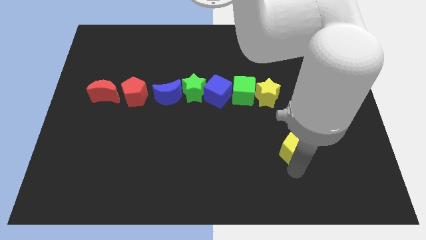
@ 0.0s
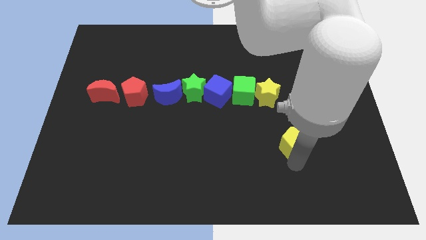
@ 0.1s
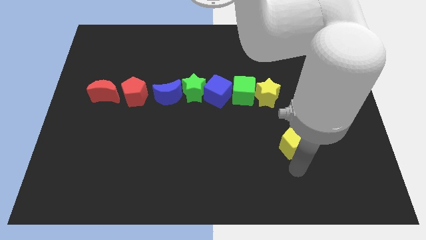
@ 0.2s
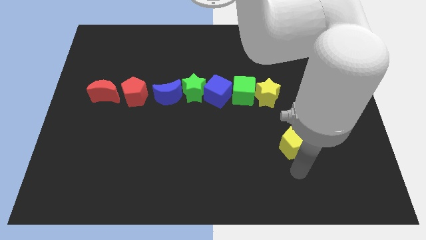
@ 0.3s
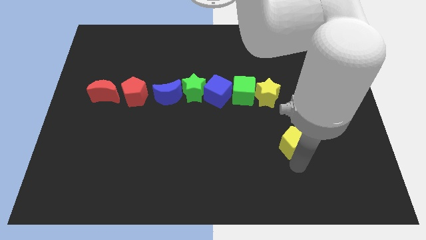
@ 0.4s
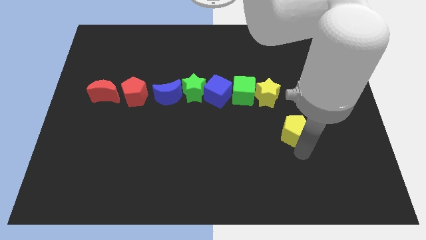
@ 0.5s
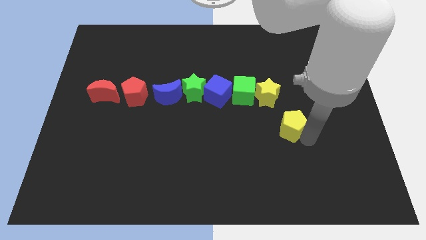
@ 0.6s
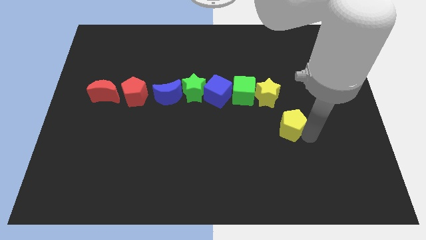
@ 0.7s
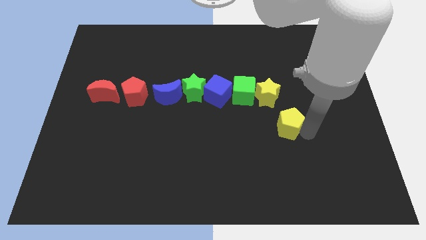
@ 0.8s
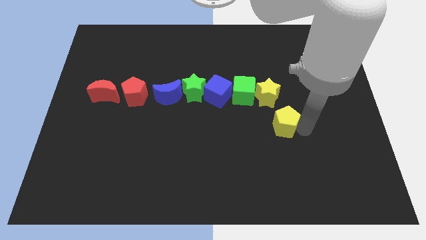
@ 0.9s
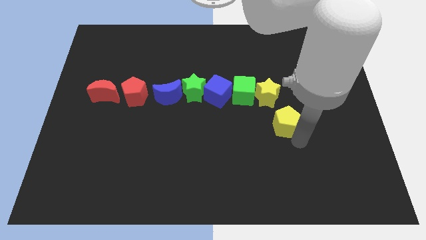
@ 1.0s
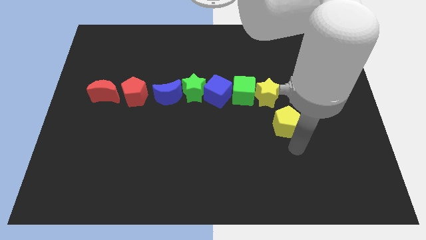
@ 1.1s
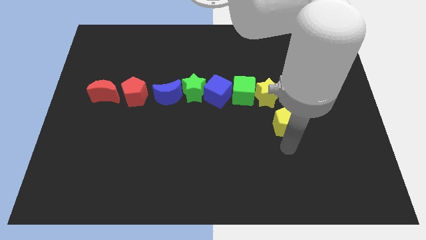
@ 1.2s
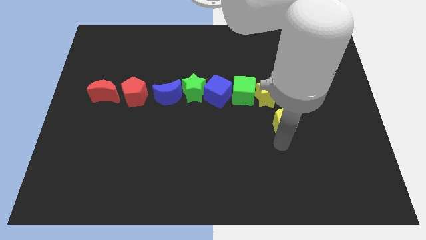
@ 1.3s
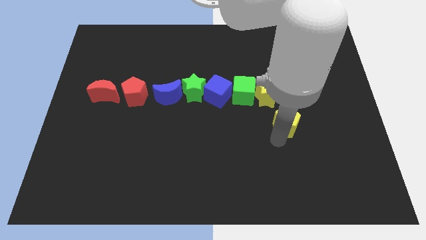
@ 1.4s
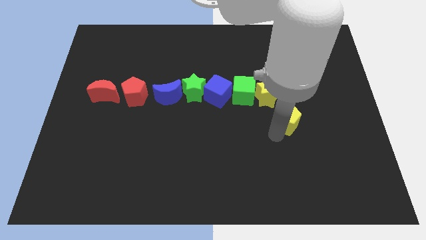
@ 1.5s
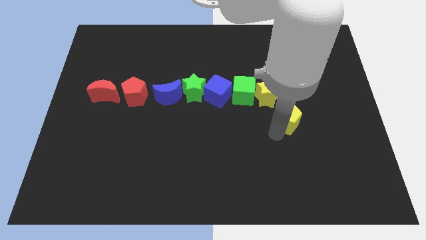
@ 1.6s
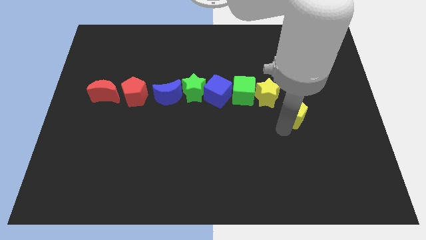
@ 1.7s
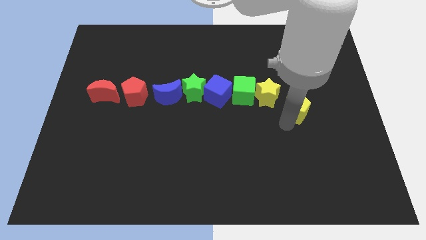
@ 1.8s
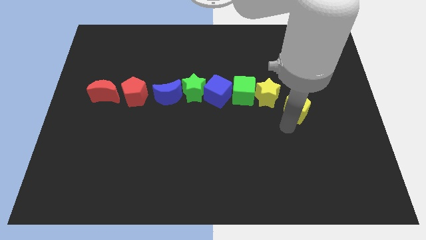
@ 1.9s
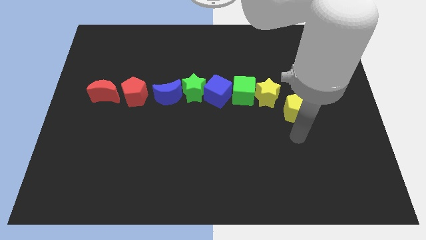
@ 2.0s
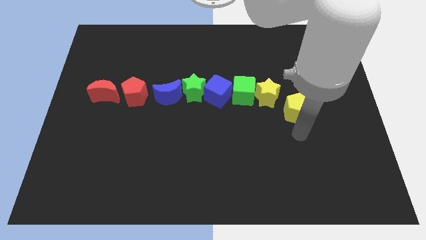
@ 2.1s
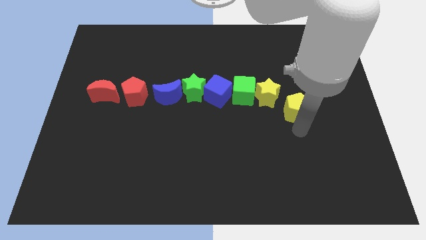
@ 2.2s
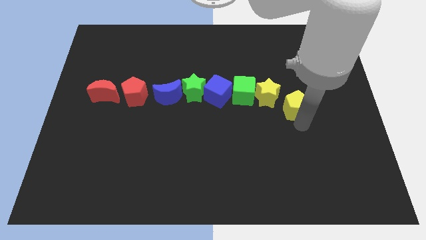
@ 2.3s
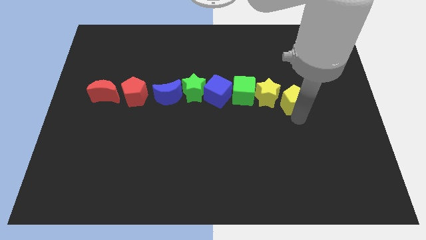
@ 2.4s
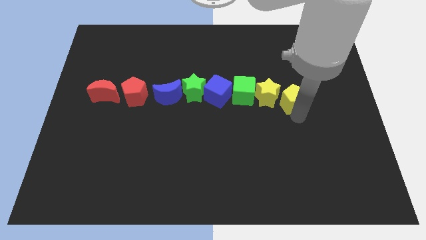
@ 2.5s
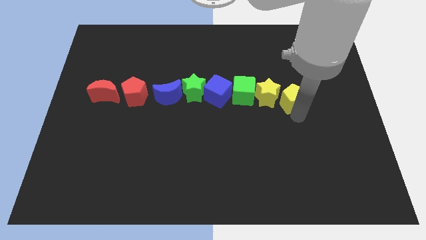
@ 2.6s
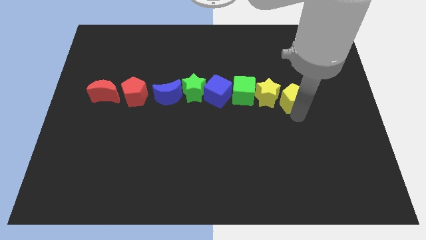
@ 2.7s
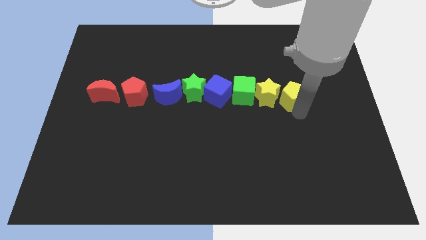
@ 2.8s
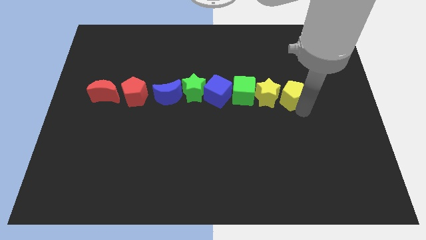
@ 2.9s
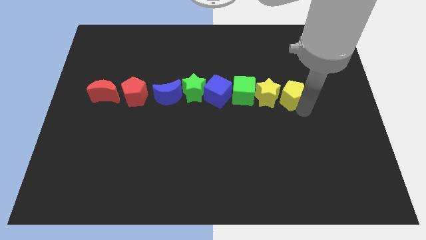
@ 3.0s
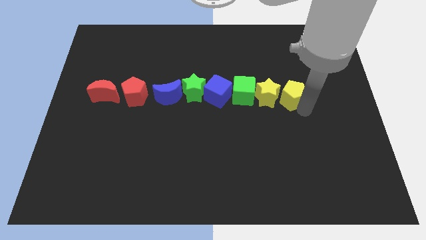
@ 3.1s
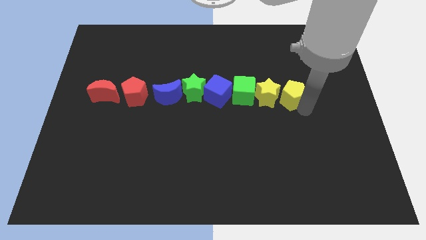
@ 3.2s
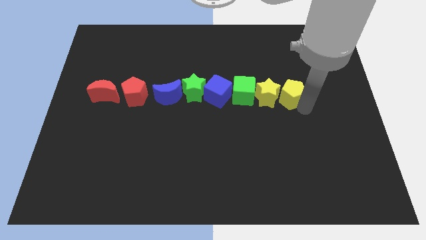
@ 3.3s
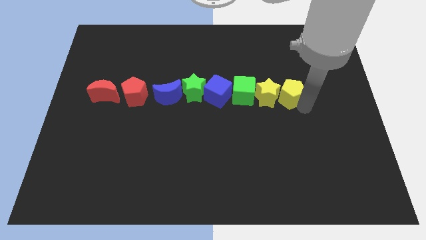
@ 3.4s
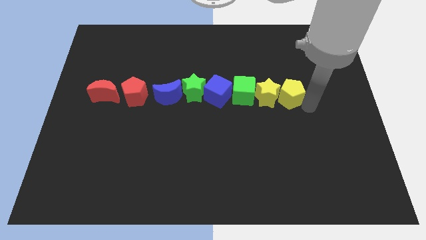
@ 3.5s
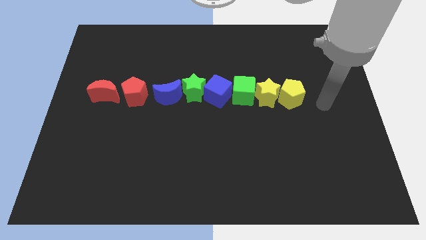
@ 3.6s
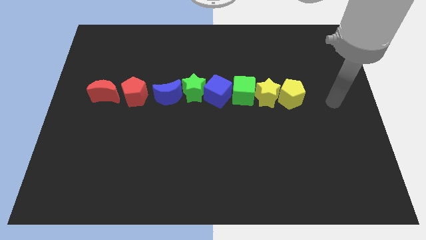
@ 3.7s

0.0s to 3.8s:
place yellow pentagon to the right of the yellow star

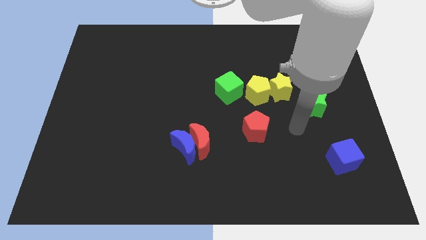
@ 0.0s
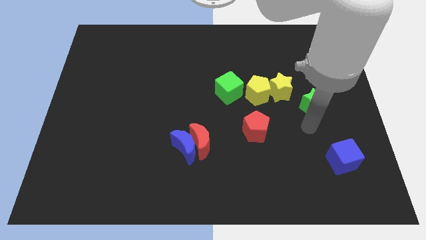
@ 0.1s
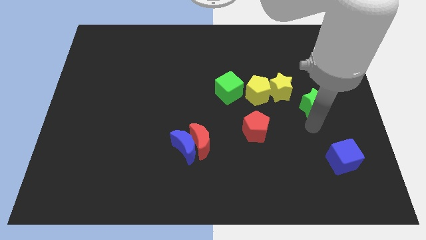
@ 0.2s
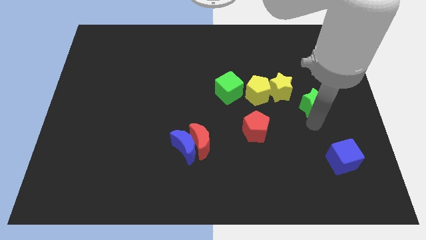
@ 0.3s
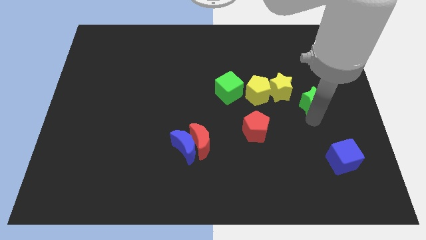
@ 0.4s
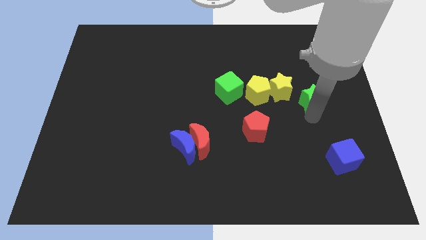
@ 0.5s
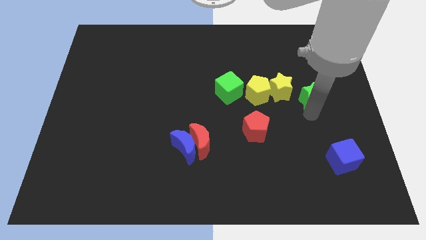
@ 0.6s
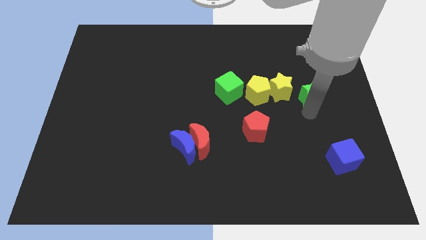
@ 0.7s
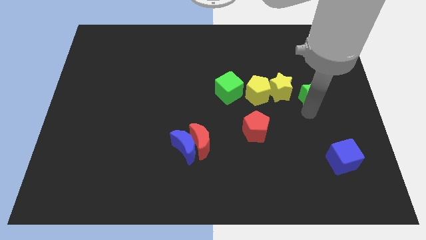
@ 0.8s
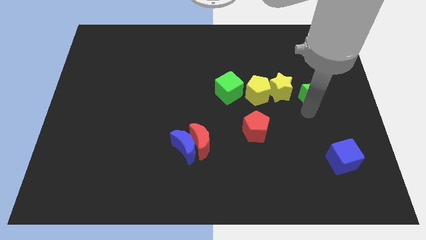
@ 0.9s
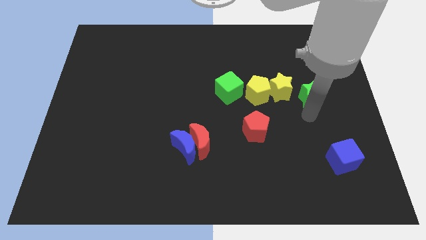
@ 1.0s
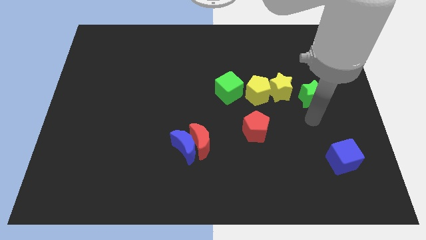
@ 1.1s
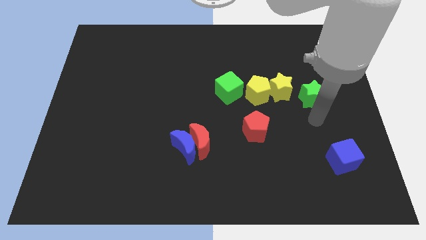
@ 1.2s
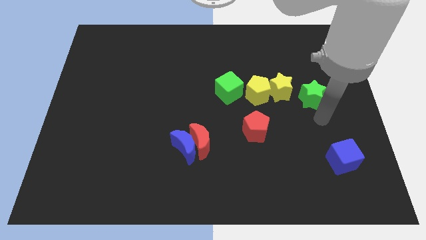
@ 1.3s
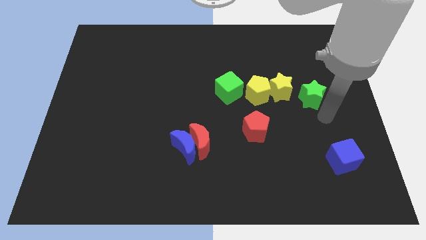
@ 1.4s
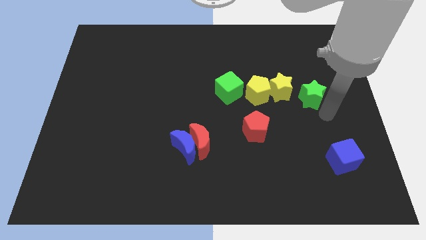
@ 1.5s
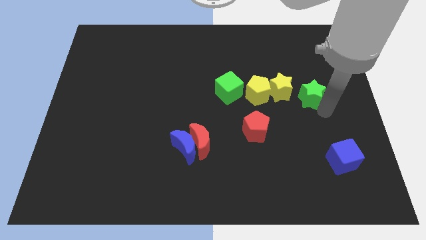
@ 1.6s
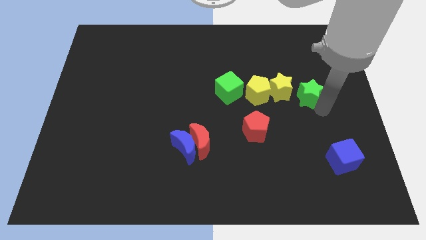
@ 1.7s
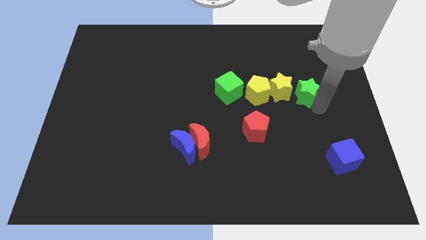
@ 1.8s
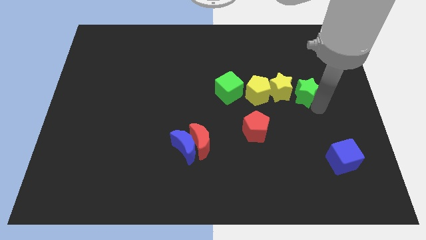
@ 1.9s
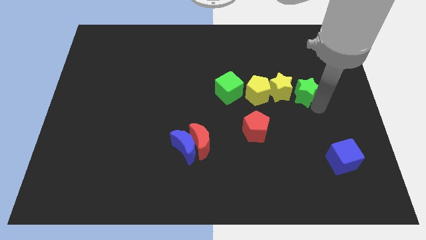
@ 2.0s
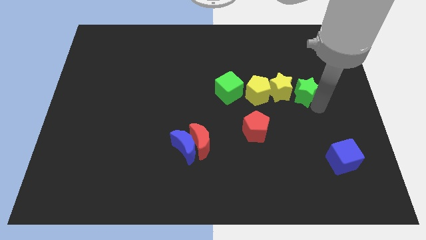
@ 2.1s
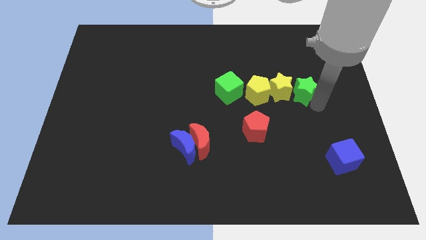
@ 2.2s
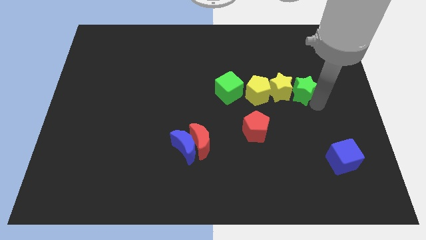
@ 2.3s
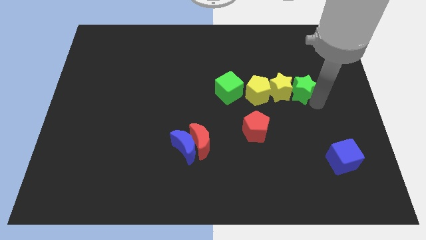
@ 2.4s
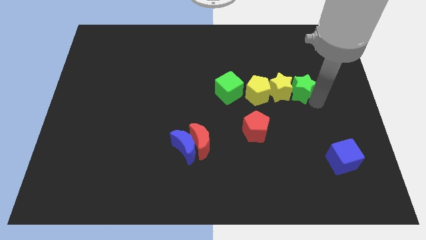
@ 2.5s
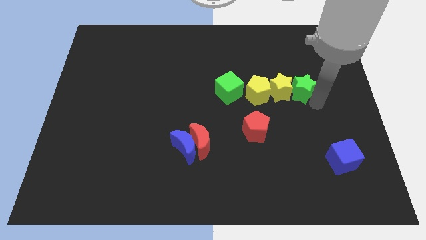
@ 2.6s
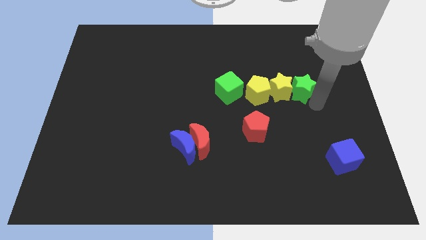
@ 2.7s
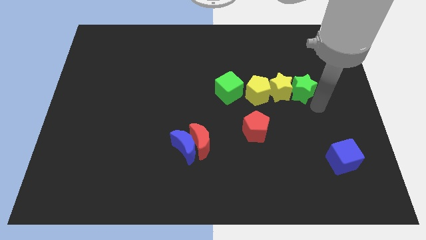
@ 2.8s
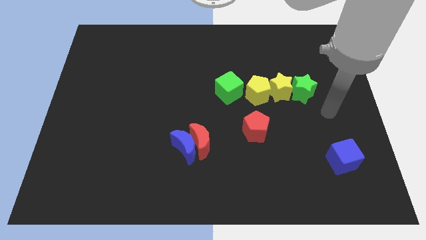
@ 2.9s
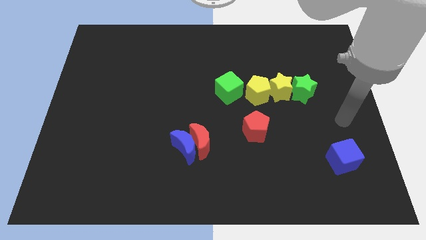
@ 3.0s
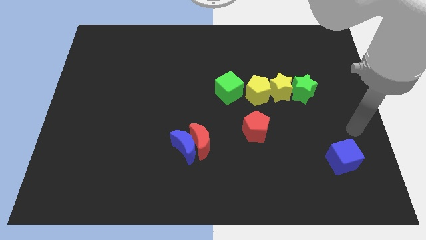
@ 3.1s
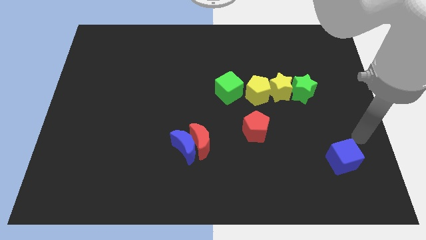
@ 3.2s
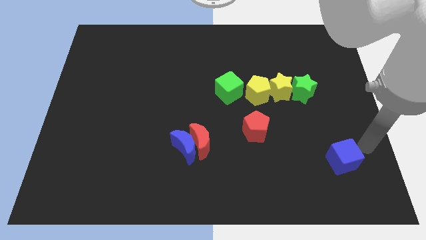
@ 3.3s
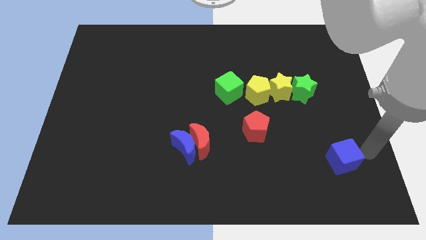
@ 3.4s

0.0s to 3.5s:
push the green star right to the yellow star

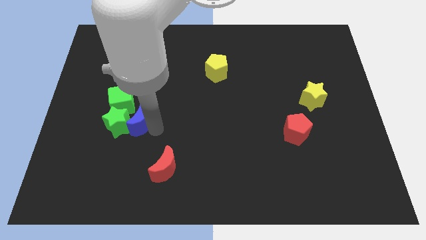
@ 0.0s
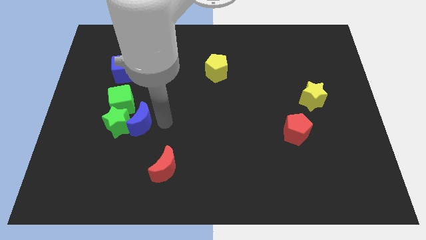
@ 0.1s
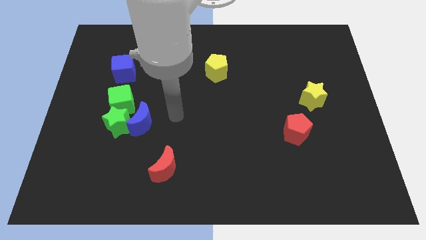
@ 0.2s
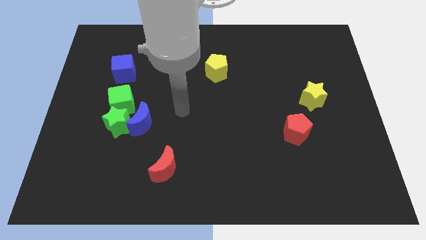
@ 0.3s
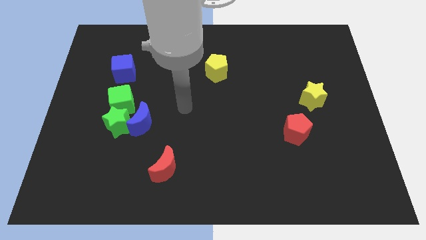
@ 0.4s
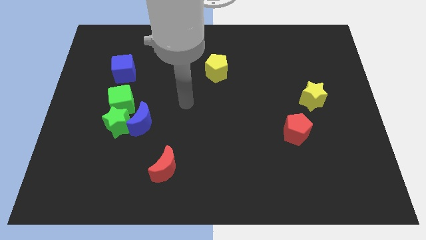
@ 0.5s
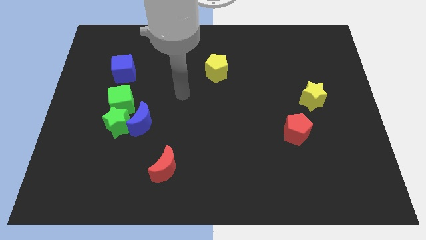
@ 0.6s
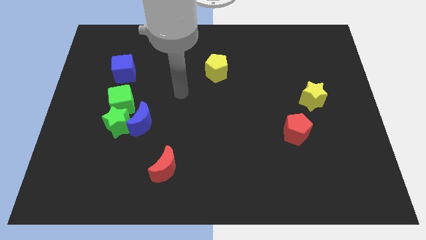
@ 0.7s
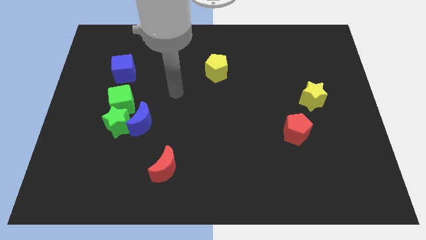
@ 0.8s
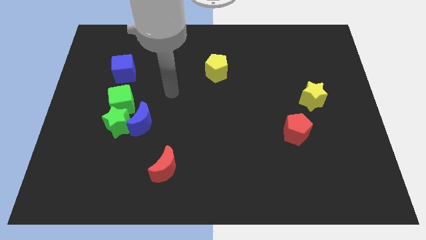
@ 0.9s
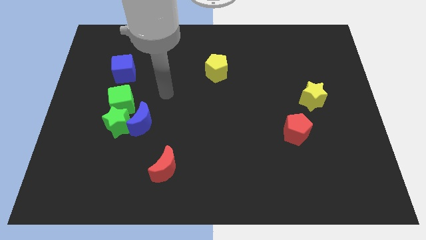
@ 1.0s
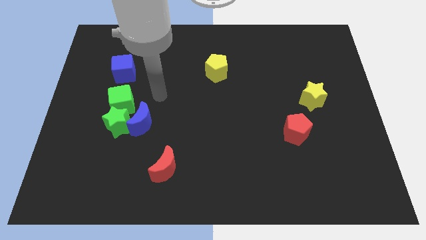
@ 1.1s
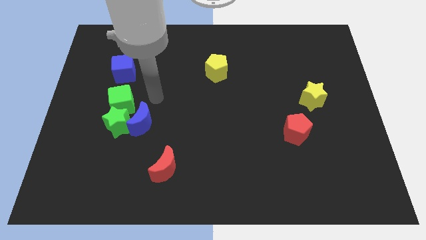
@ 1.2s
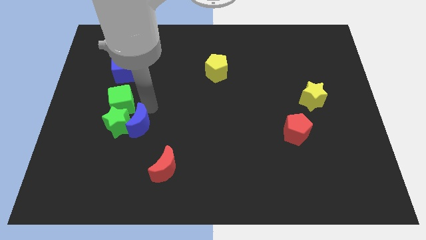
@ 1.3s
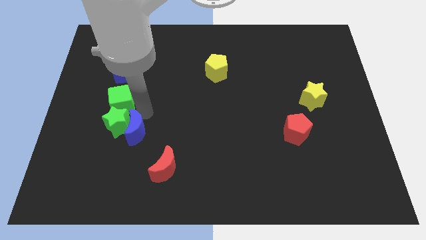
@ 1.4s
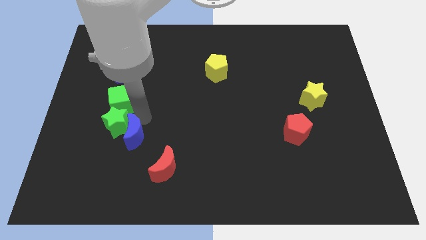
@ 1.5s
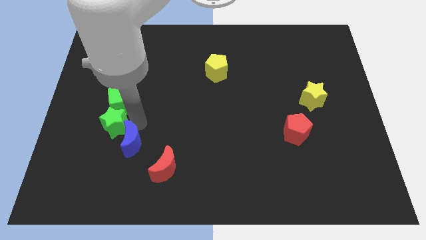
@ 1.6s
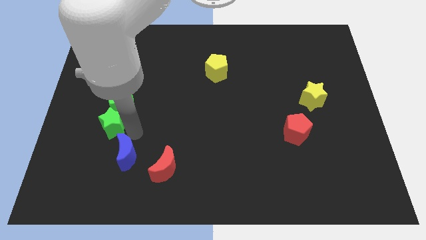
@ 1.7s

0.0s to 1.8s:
place the blue crescent to the bottom side of the green star
